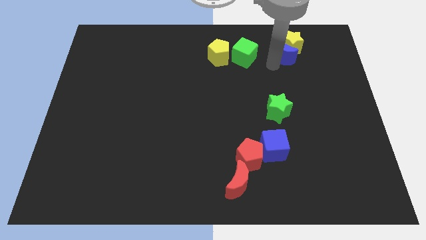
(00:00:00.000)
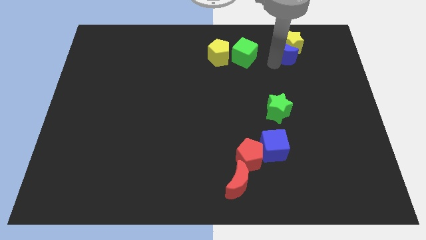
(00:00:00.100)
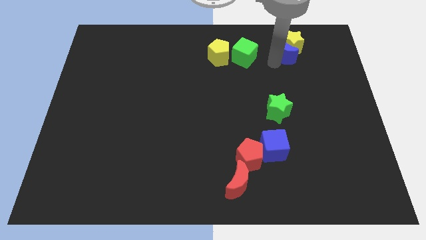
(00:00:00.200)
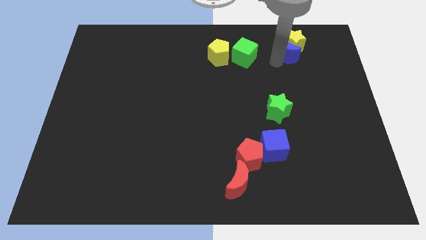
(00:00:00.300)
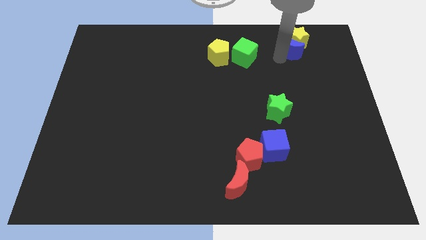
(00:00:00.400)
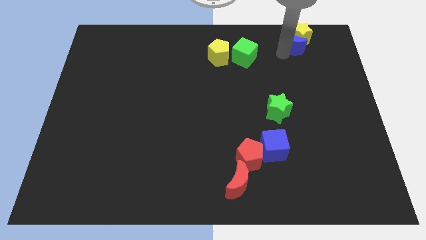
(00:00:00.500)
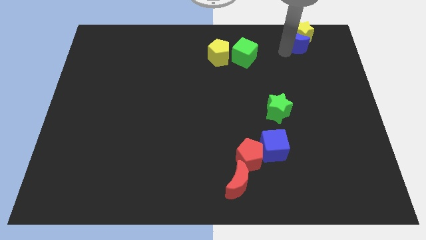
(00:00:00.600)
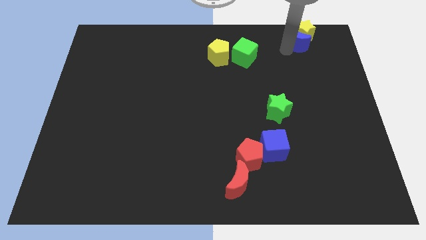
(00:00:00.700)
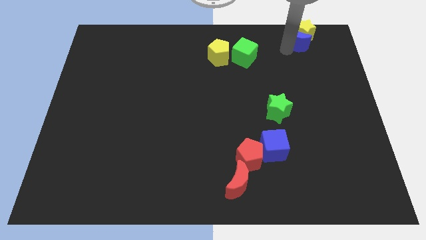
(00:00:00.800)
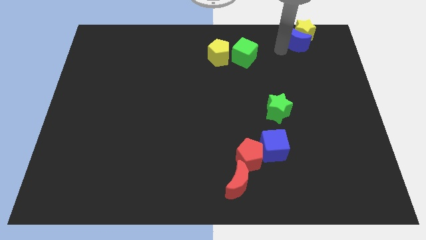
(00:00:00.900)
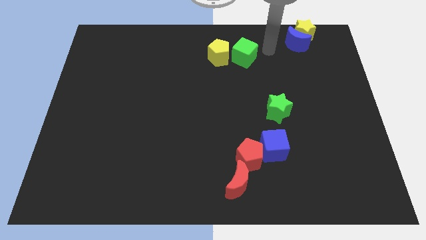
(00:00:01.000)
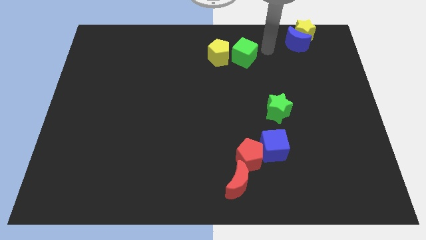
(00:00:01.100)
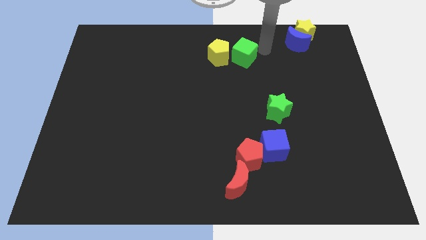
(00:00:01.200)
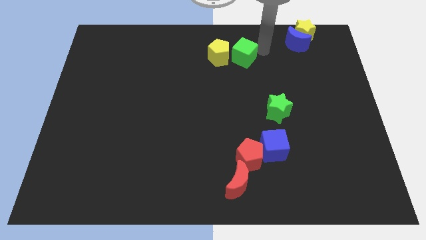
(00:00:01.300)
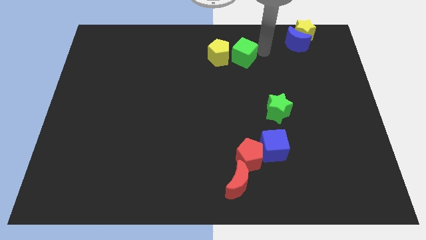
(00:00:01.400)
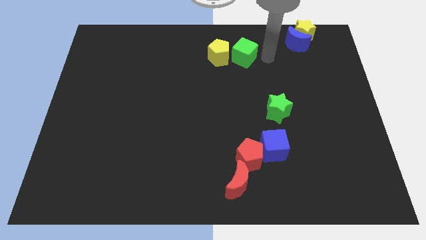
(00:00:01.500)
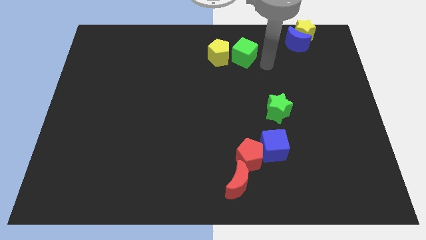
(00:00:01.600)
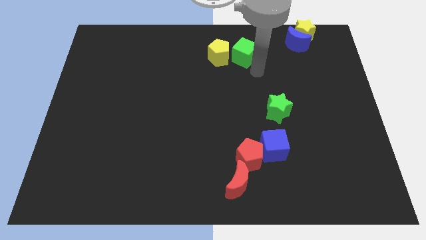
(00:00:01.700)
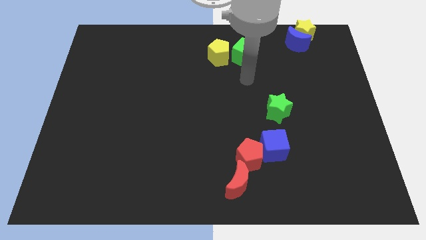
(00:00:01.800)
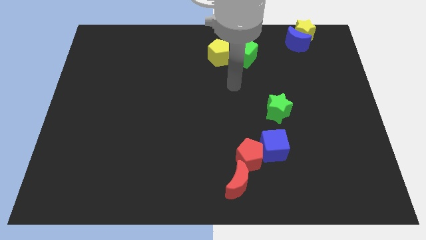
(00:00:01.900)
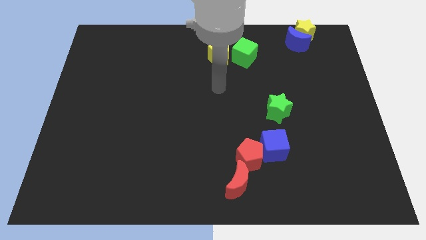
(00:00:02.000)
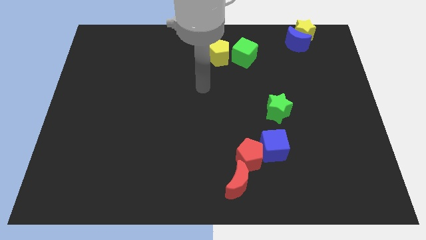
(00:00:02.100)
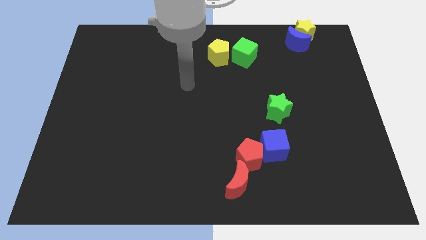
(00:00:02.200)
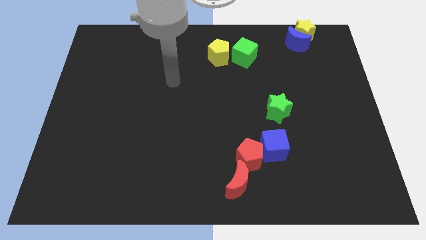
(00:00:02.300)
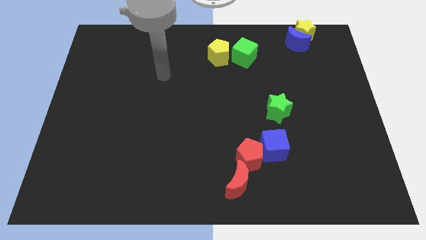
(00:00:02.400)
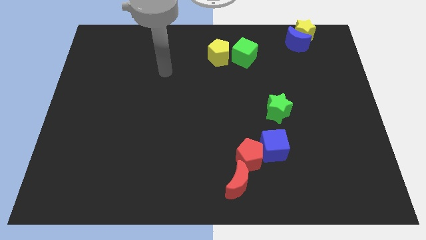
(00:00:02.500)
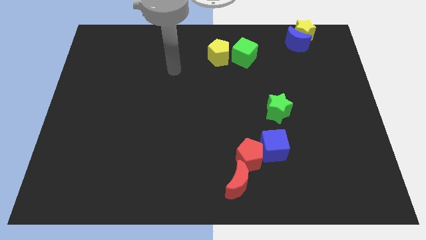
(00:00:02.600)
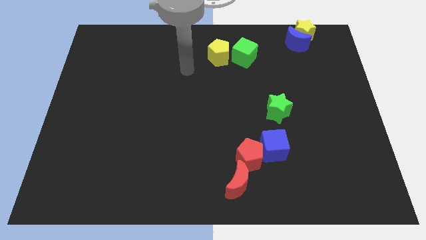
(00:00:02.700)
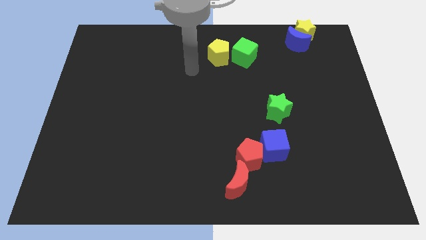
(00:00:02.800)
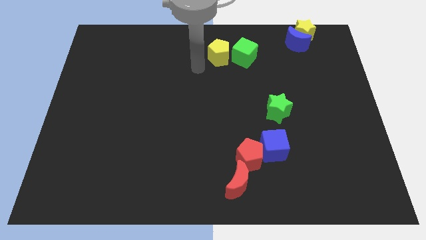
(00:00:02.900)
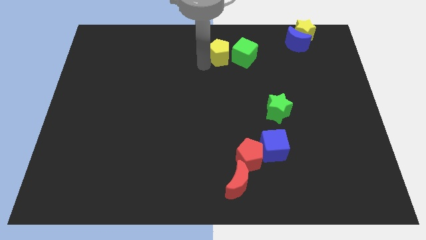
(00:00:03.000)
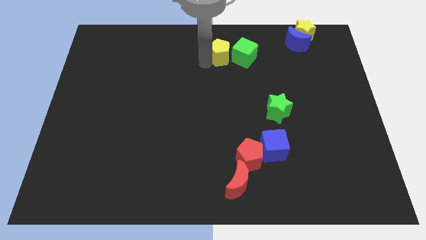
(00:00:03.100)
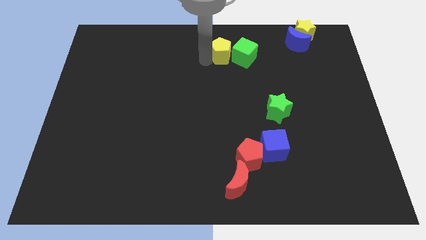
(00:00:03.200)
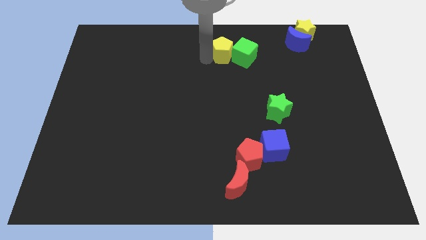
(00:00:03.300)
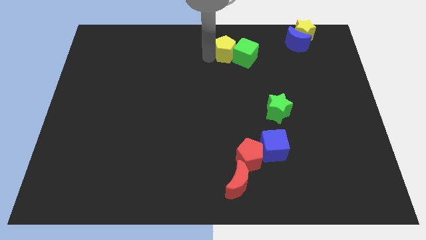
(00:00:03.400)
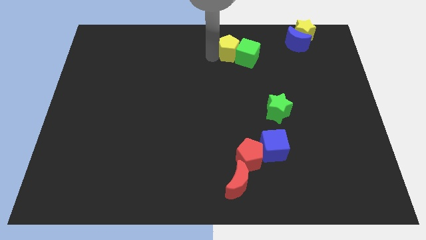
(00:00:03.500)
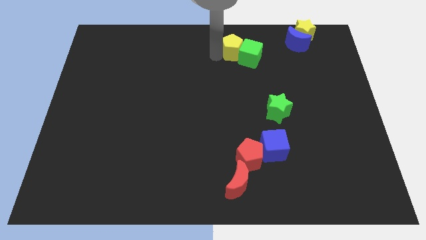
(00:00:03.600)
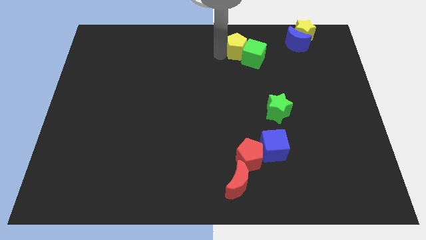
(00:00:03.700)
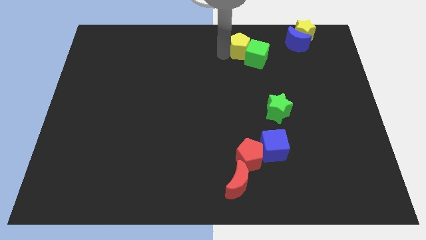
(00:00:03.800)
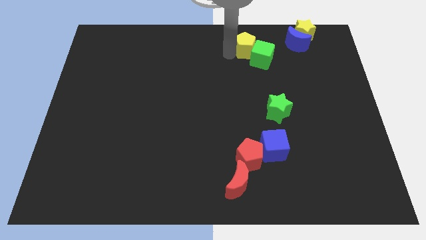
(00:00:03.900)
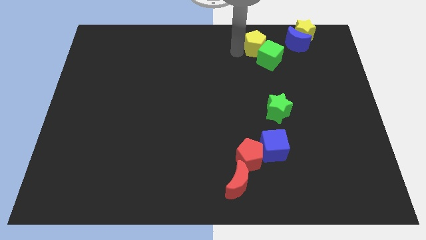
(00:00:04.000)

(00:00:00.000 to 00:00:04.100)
move yellow pentagon towards blue crescent

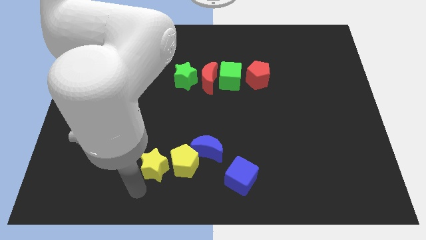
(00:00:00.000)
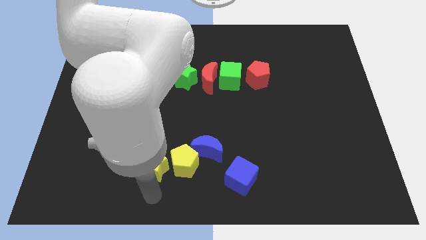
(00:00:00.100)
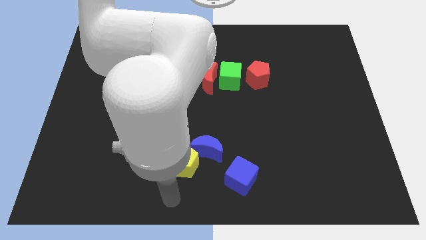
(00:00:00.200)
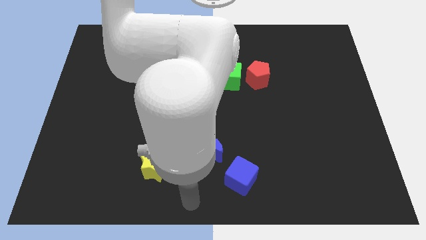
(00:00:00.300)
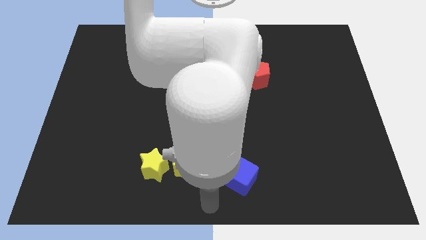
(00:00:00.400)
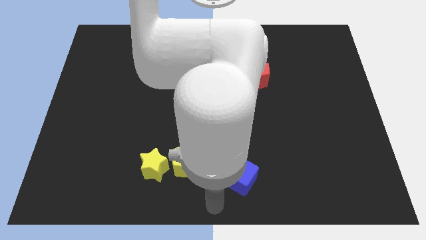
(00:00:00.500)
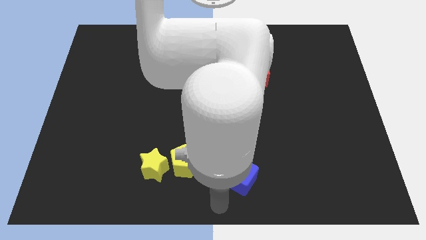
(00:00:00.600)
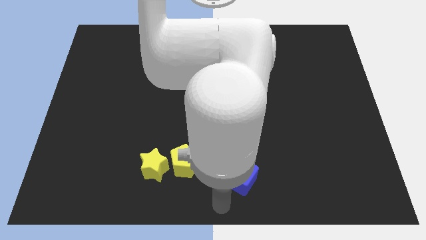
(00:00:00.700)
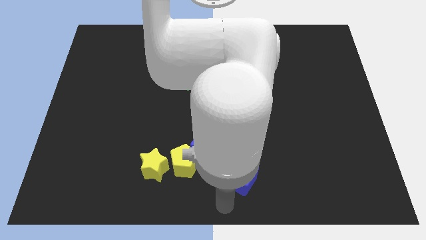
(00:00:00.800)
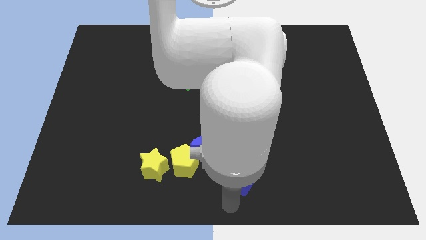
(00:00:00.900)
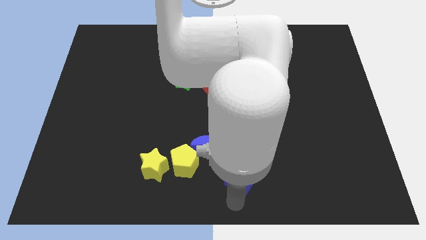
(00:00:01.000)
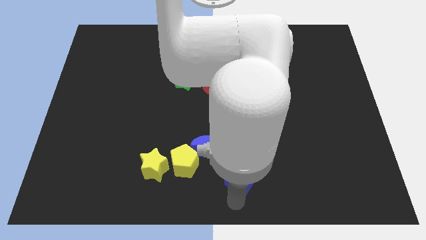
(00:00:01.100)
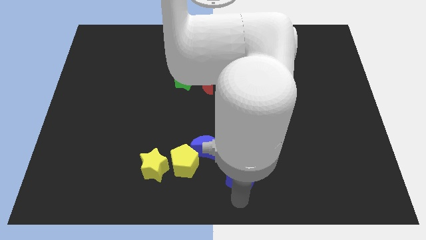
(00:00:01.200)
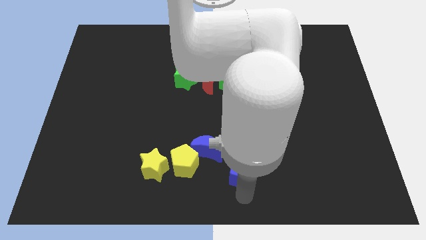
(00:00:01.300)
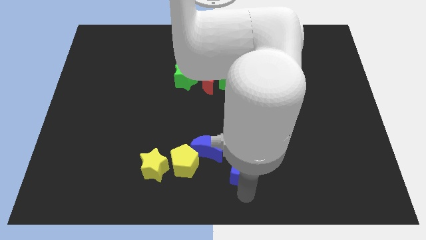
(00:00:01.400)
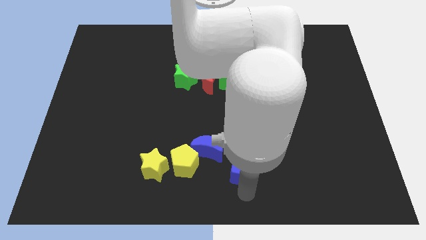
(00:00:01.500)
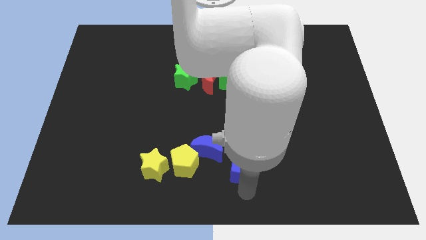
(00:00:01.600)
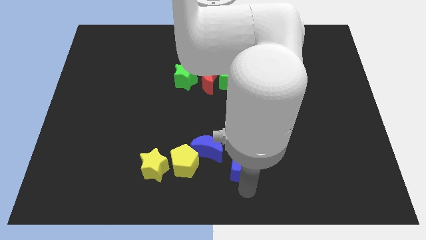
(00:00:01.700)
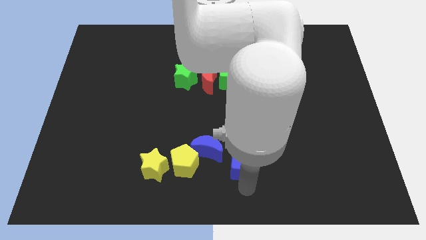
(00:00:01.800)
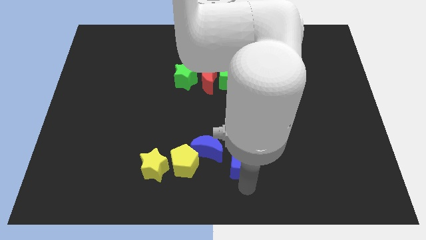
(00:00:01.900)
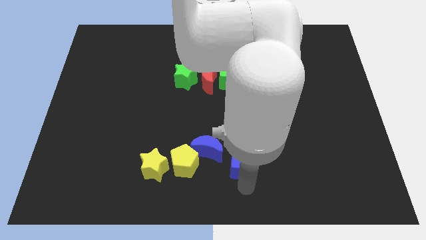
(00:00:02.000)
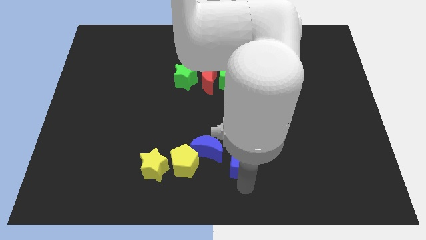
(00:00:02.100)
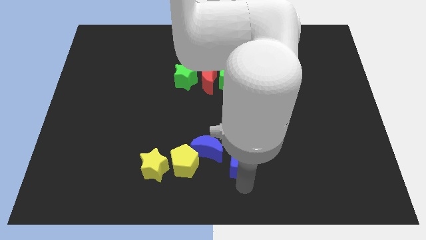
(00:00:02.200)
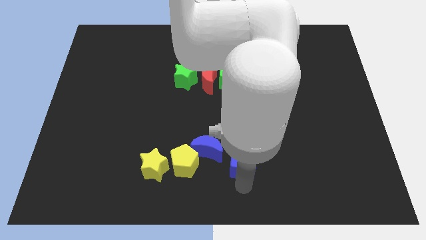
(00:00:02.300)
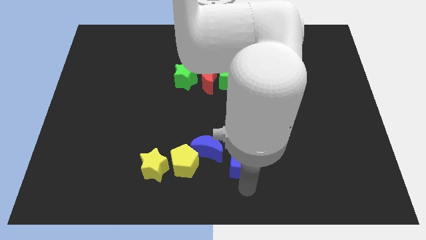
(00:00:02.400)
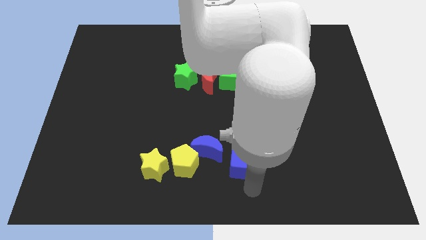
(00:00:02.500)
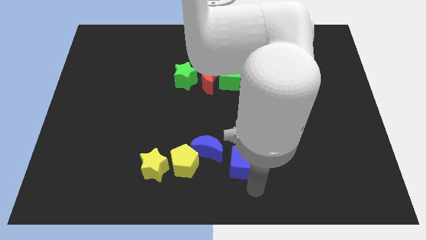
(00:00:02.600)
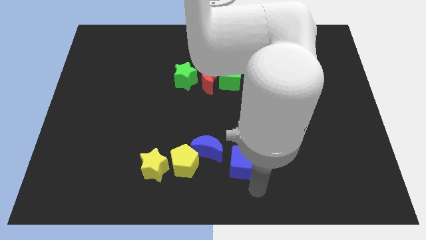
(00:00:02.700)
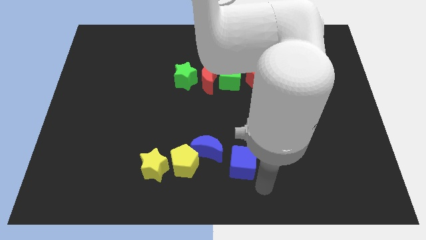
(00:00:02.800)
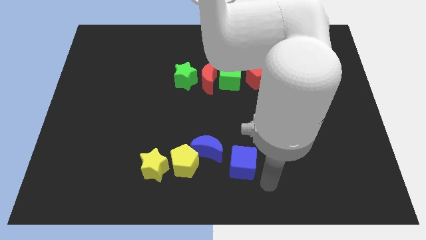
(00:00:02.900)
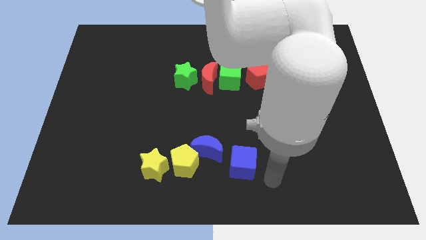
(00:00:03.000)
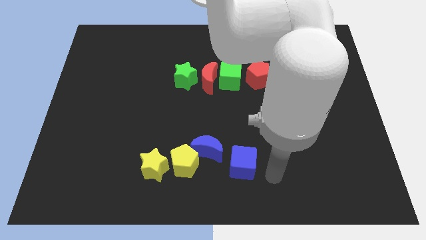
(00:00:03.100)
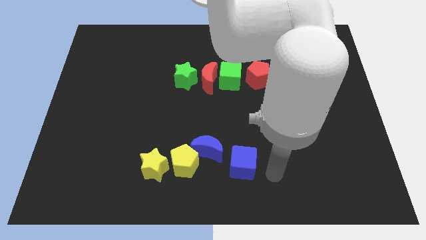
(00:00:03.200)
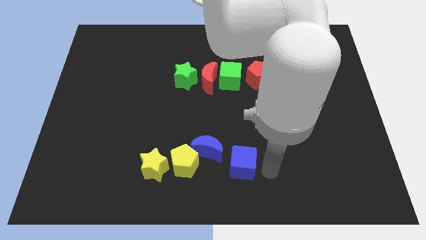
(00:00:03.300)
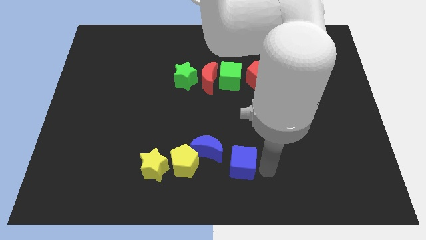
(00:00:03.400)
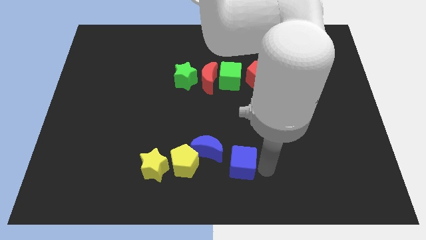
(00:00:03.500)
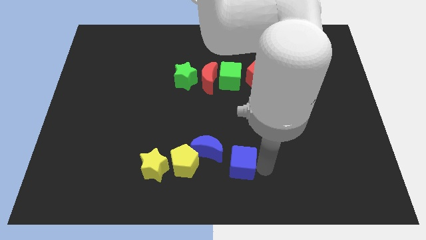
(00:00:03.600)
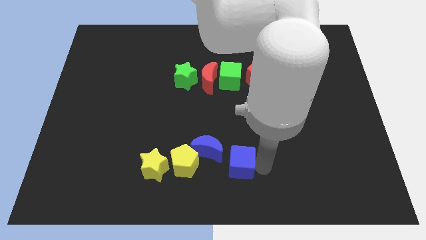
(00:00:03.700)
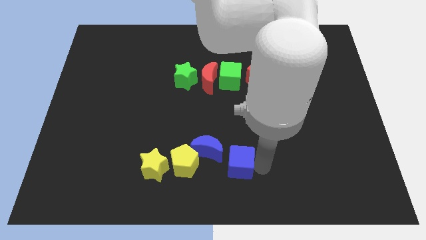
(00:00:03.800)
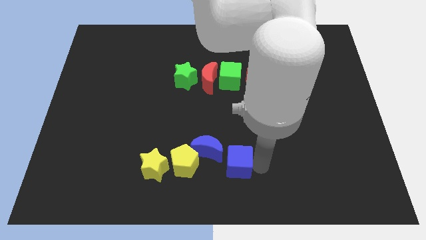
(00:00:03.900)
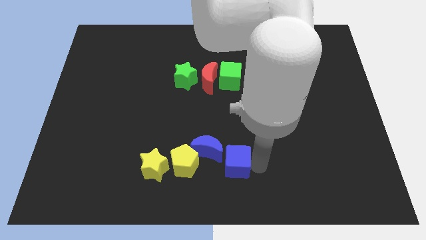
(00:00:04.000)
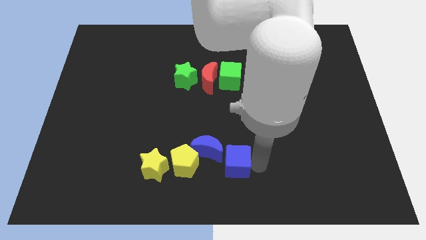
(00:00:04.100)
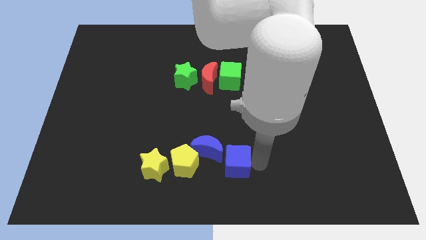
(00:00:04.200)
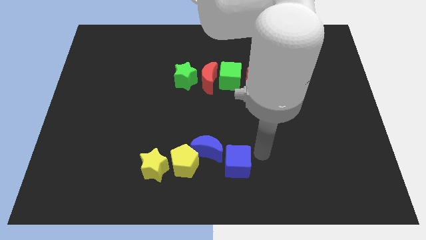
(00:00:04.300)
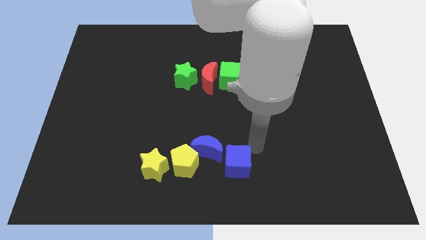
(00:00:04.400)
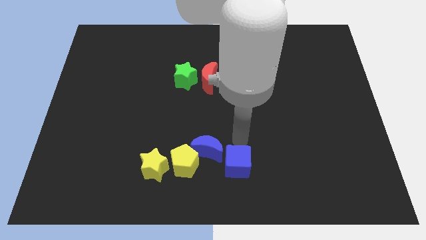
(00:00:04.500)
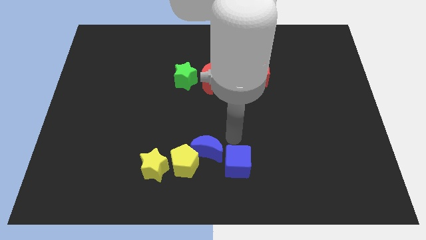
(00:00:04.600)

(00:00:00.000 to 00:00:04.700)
slightly push the blue cube near the blue moon

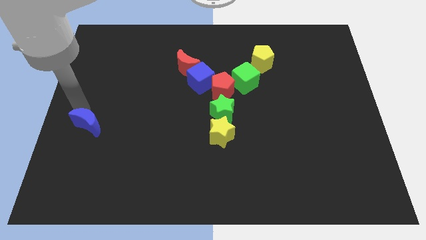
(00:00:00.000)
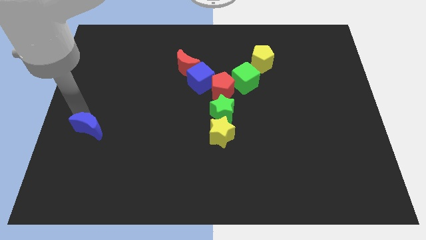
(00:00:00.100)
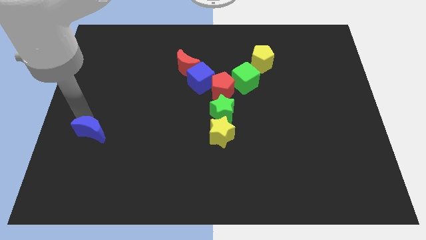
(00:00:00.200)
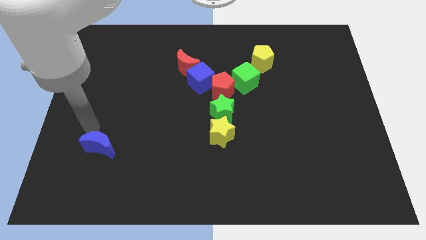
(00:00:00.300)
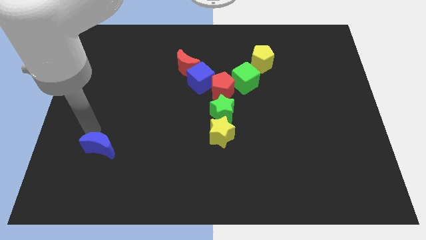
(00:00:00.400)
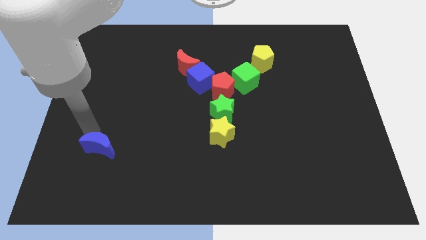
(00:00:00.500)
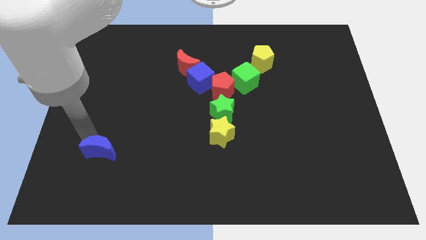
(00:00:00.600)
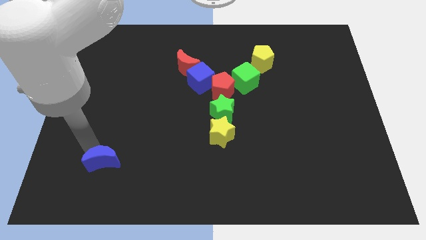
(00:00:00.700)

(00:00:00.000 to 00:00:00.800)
move blue moon slightly down
